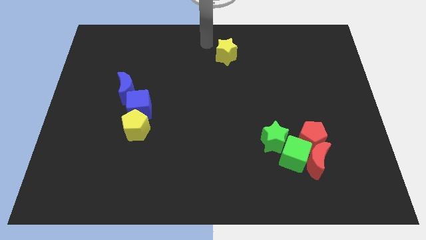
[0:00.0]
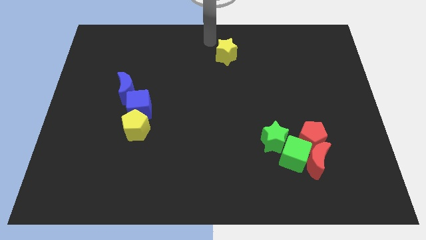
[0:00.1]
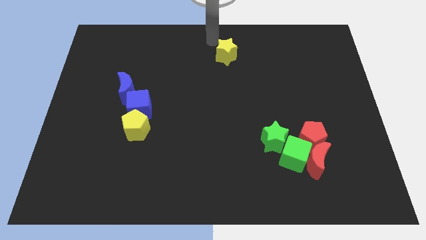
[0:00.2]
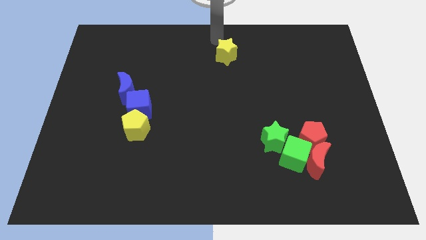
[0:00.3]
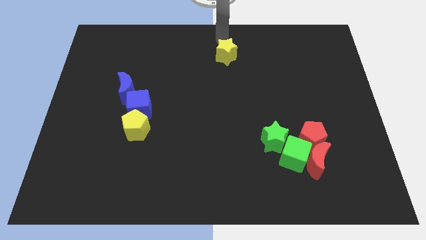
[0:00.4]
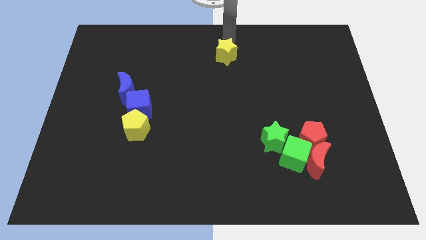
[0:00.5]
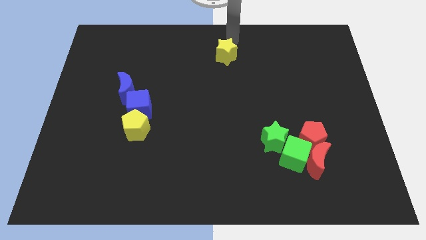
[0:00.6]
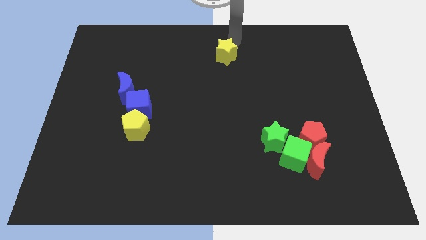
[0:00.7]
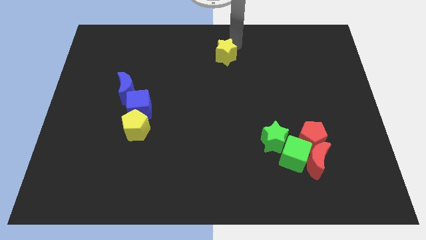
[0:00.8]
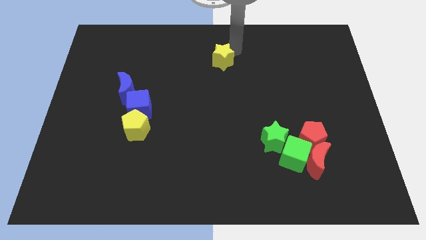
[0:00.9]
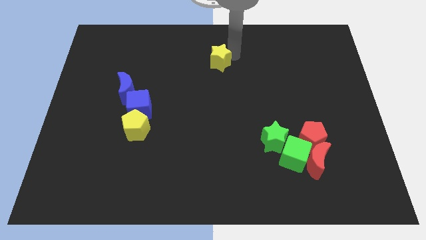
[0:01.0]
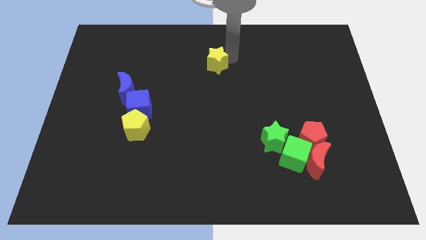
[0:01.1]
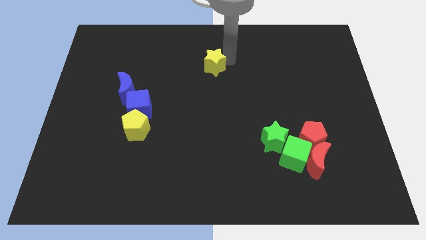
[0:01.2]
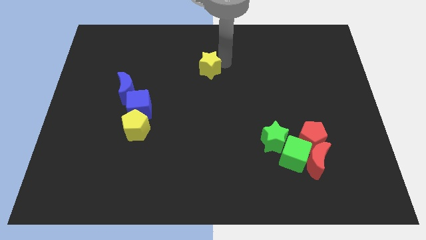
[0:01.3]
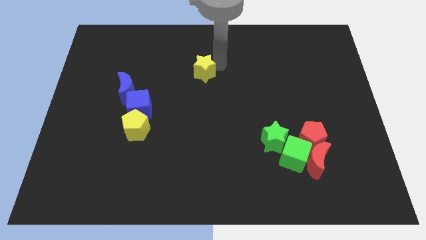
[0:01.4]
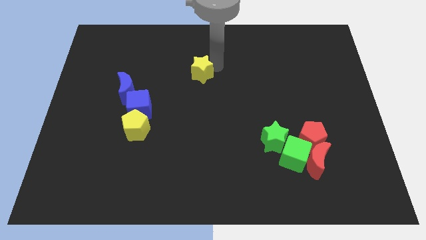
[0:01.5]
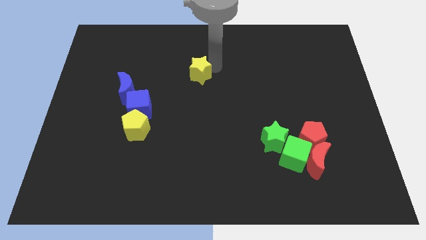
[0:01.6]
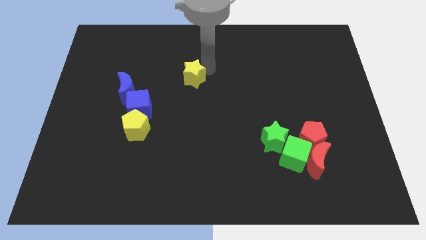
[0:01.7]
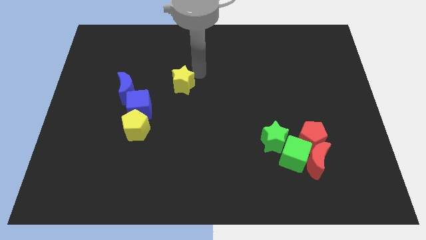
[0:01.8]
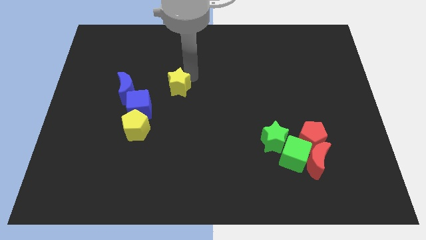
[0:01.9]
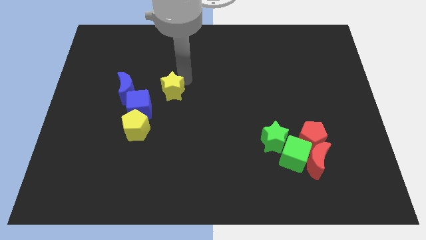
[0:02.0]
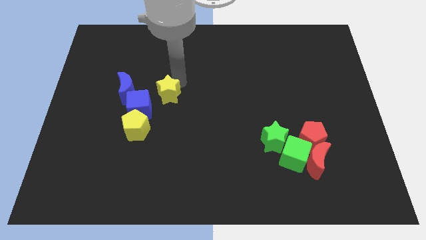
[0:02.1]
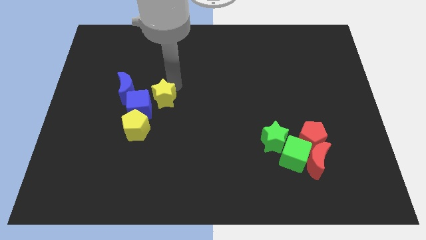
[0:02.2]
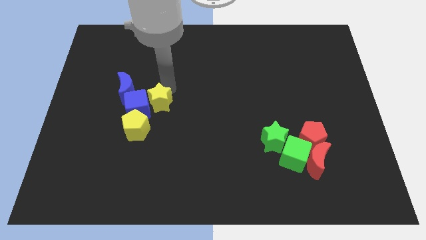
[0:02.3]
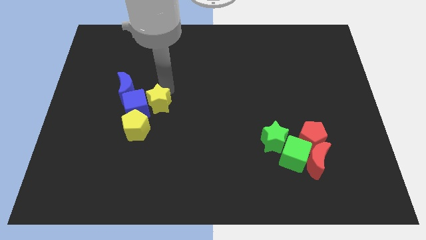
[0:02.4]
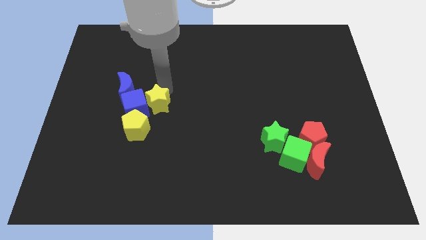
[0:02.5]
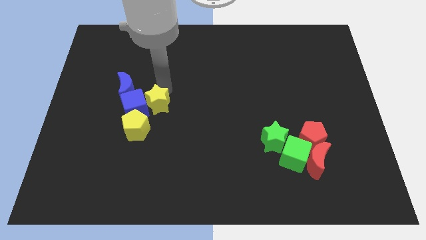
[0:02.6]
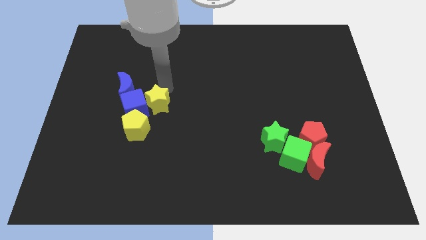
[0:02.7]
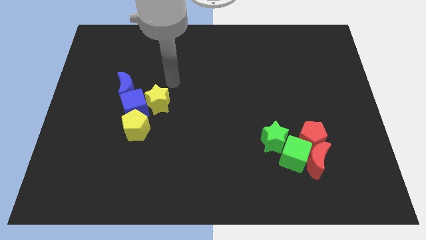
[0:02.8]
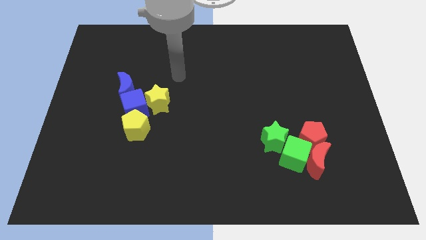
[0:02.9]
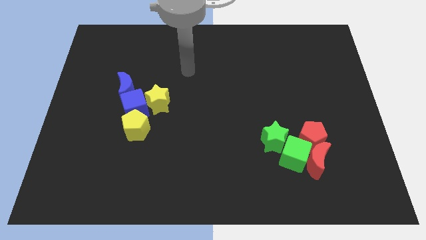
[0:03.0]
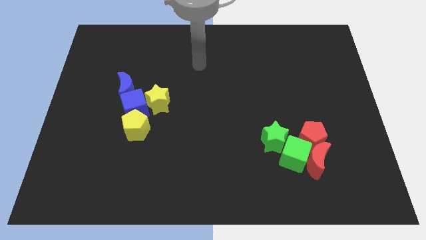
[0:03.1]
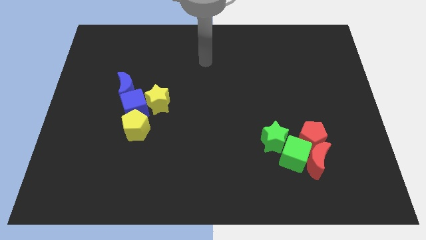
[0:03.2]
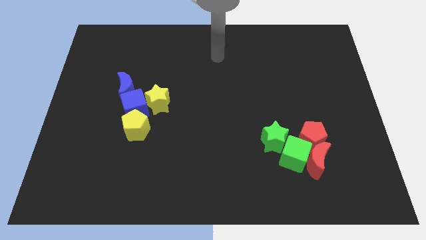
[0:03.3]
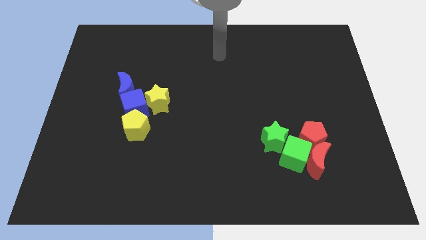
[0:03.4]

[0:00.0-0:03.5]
push the yellow star into the right side of the blue cube

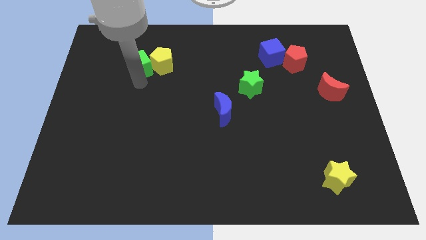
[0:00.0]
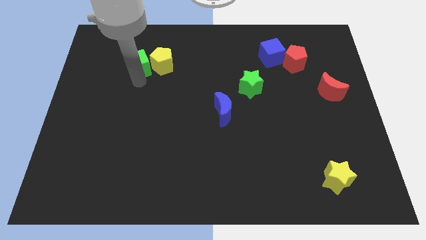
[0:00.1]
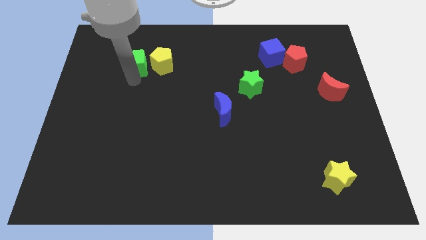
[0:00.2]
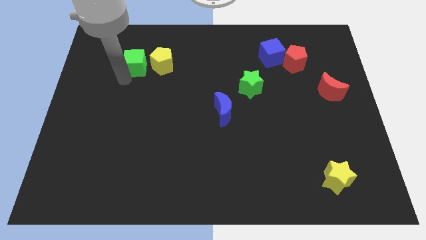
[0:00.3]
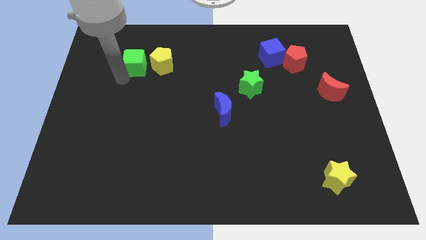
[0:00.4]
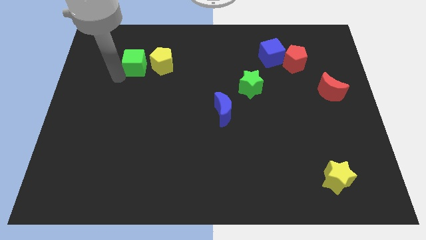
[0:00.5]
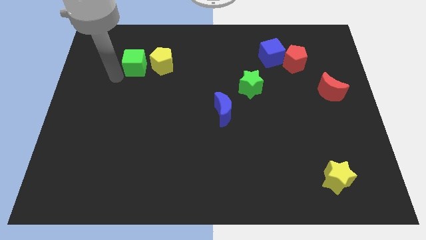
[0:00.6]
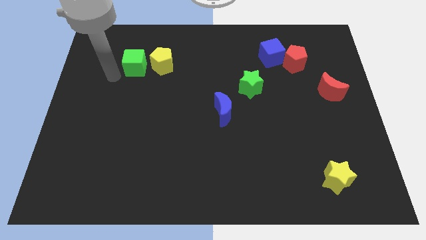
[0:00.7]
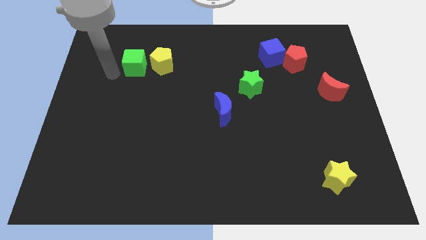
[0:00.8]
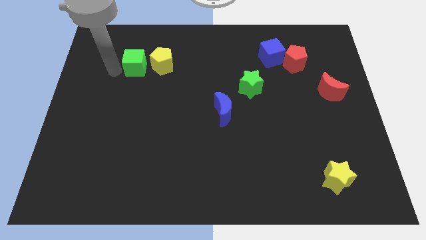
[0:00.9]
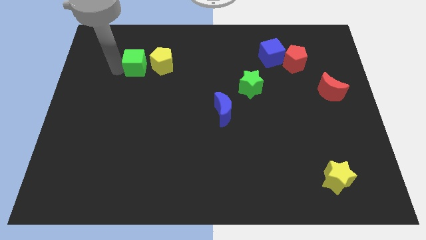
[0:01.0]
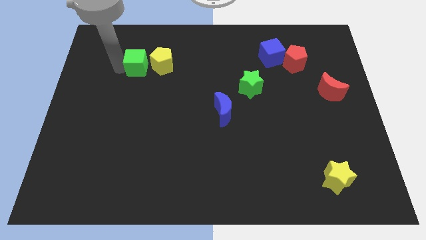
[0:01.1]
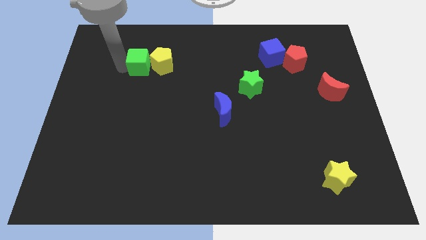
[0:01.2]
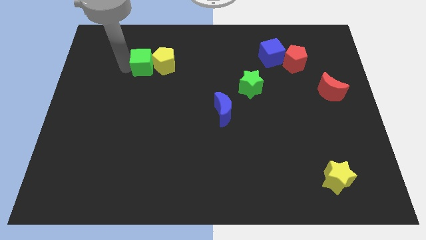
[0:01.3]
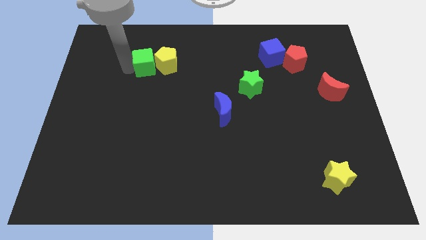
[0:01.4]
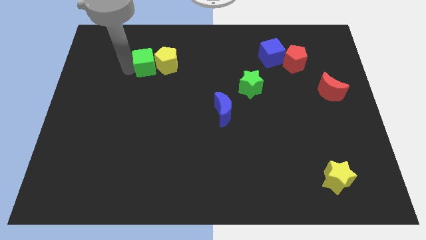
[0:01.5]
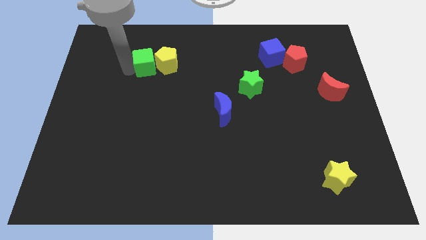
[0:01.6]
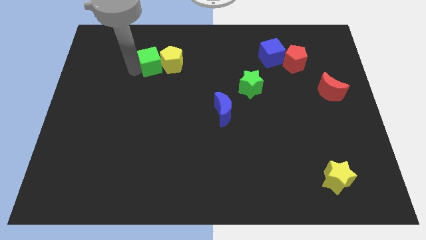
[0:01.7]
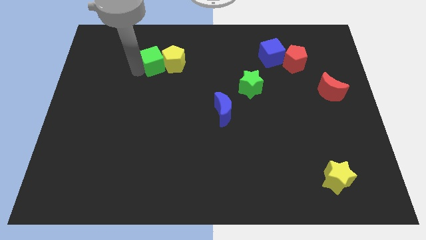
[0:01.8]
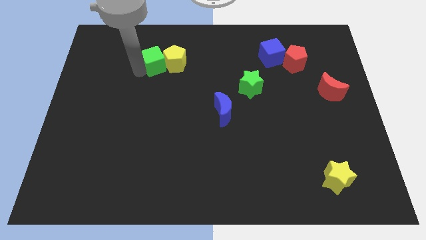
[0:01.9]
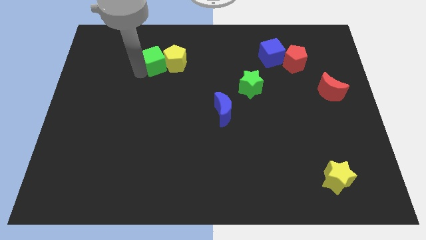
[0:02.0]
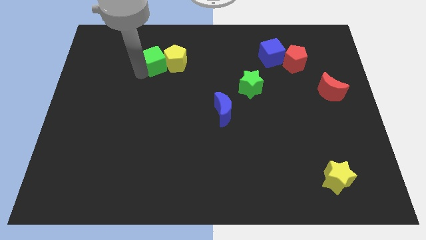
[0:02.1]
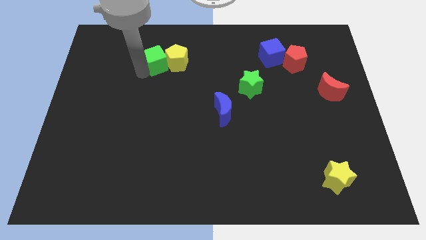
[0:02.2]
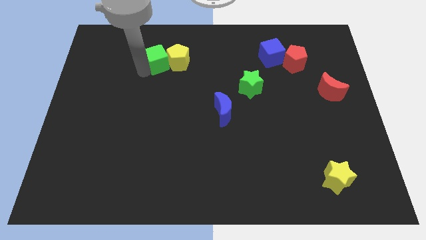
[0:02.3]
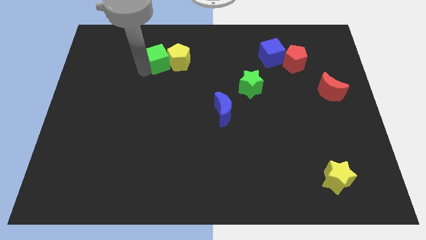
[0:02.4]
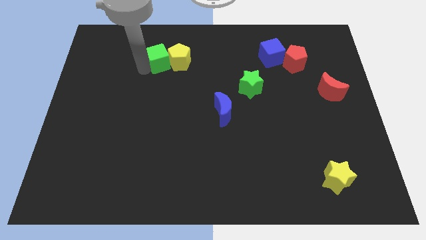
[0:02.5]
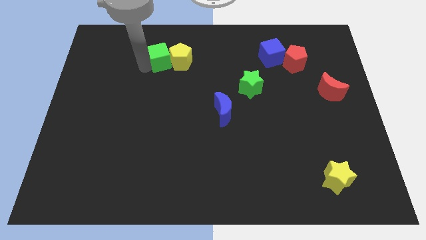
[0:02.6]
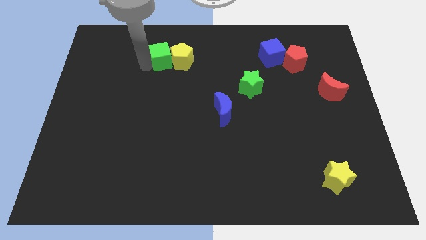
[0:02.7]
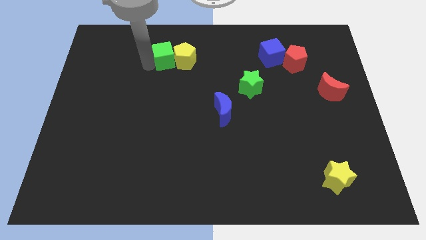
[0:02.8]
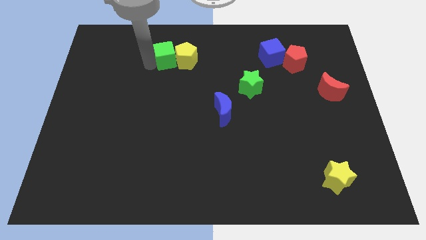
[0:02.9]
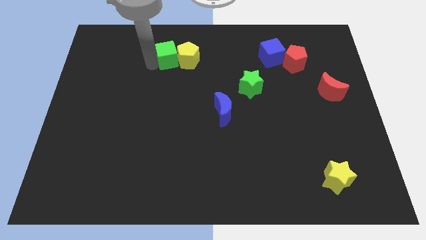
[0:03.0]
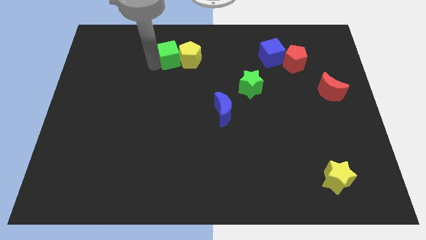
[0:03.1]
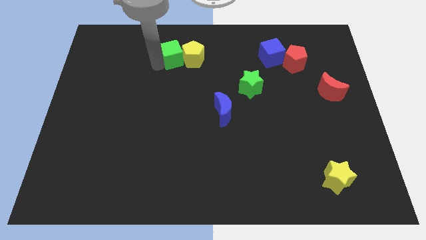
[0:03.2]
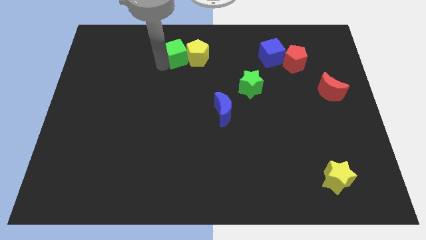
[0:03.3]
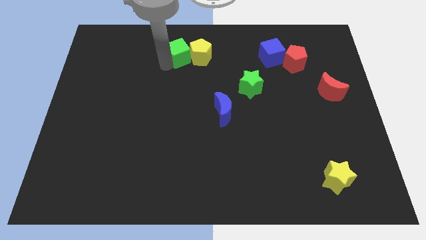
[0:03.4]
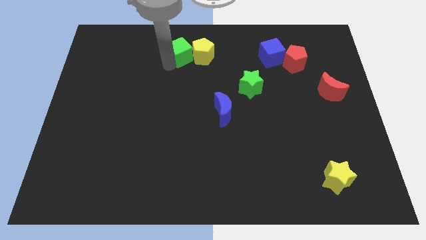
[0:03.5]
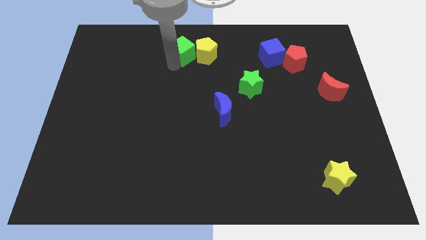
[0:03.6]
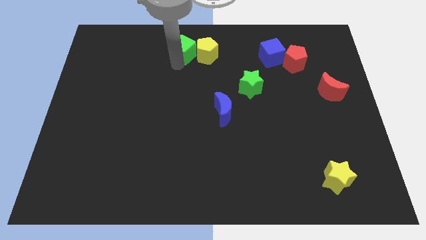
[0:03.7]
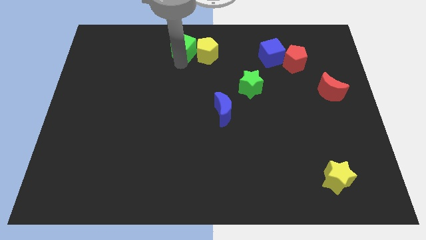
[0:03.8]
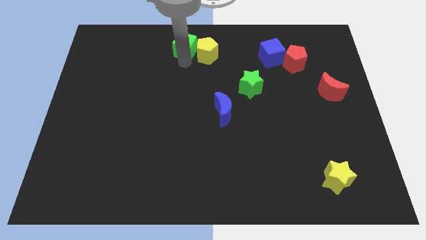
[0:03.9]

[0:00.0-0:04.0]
bring the green cube and yellow pentagon towards the left side of the blue cube

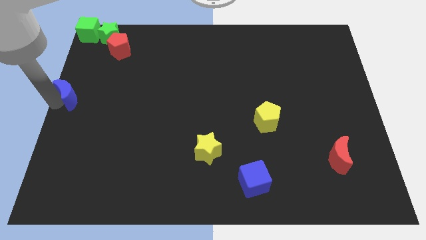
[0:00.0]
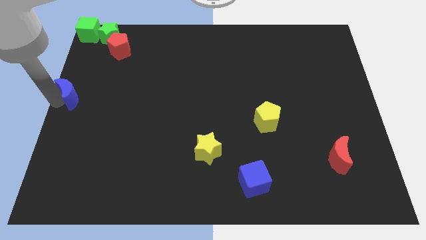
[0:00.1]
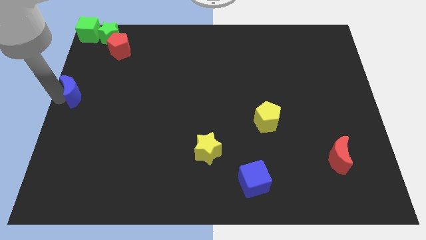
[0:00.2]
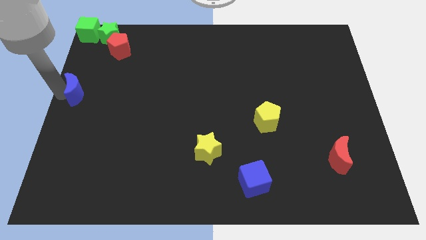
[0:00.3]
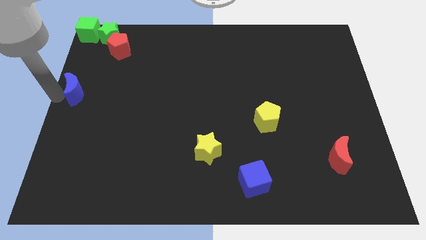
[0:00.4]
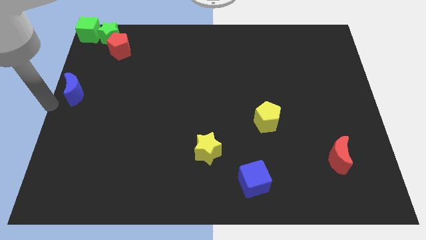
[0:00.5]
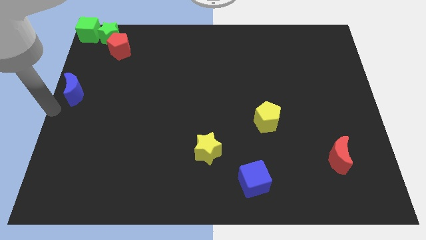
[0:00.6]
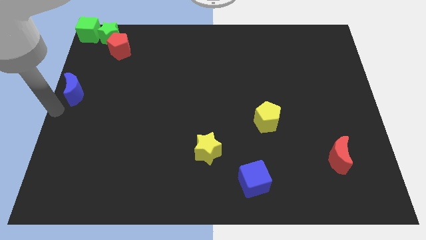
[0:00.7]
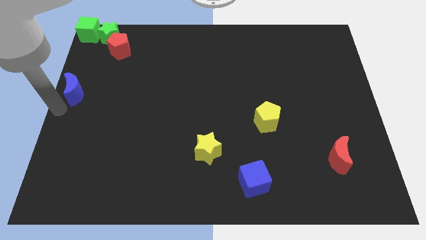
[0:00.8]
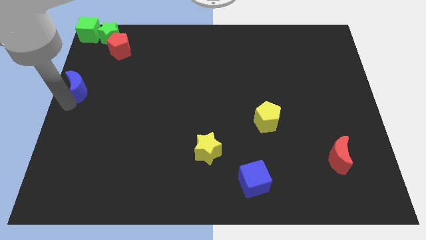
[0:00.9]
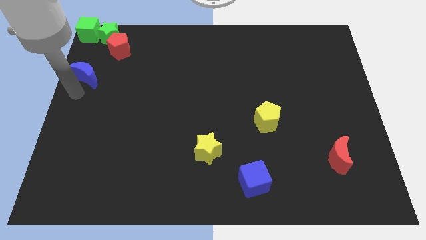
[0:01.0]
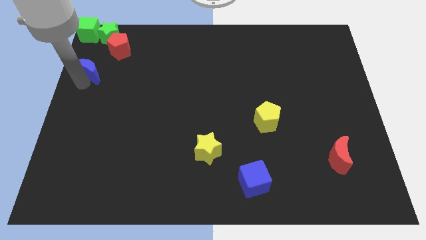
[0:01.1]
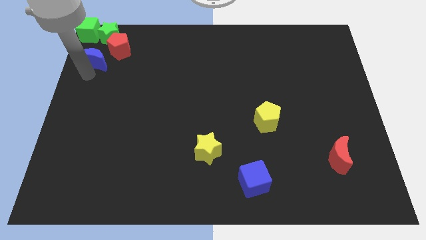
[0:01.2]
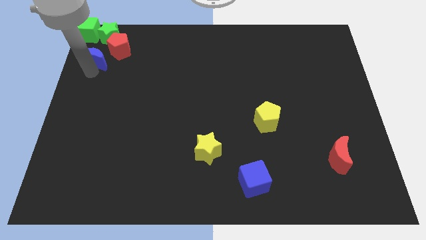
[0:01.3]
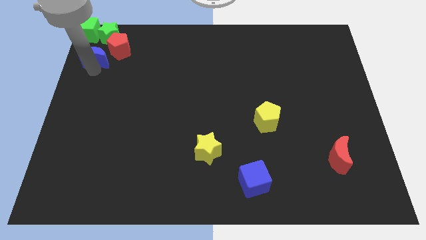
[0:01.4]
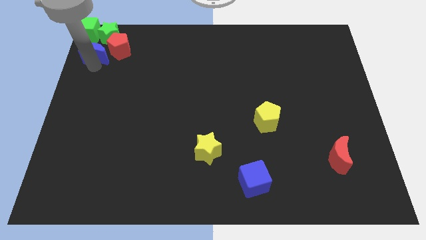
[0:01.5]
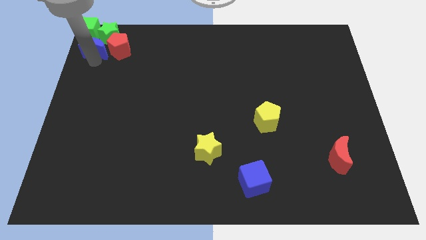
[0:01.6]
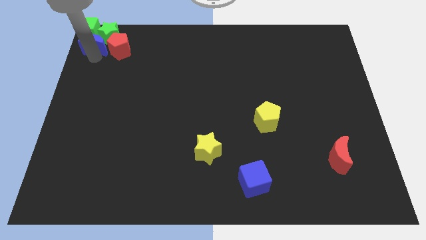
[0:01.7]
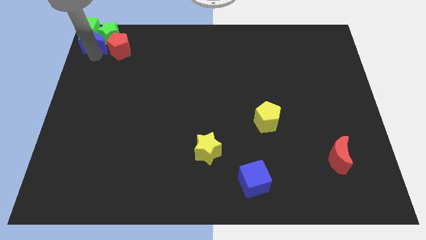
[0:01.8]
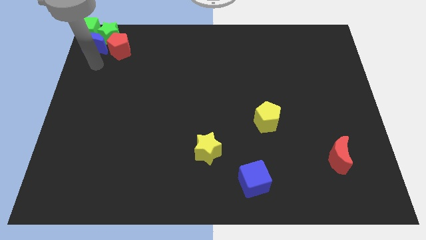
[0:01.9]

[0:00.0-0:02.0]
place blue crescent below green blocks
